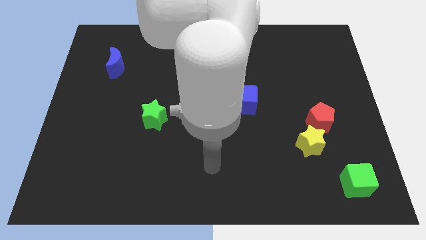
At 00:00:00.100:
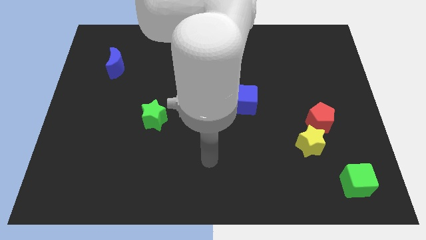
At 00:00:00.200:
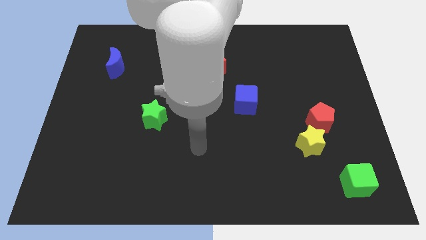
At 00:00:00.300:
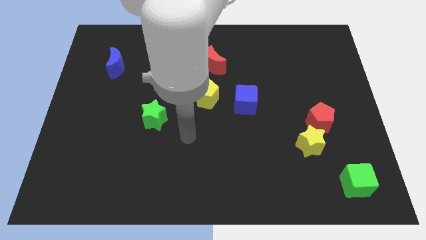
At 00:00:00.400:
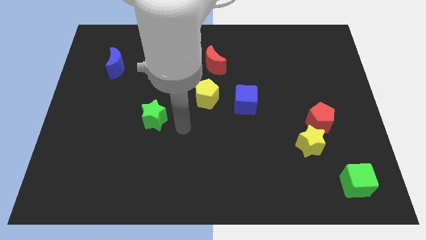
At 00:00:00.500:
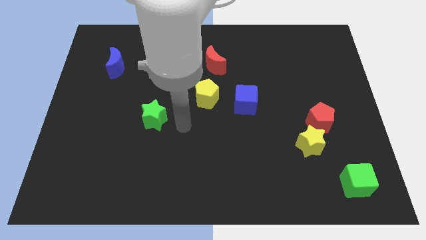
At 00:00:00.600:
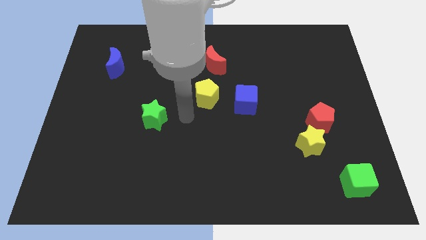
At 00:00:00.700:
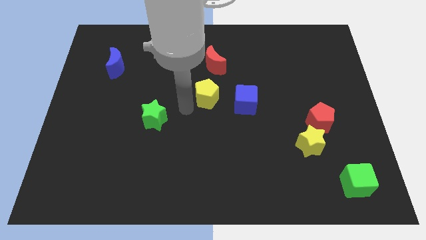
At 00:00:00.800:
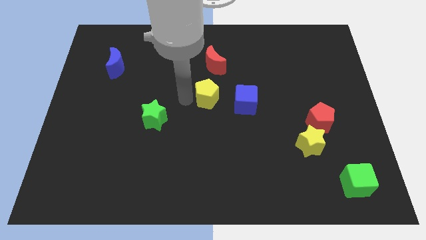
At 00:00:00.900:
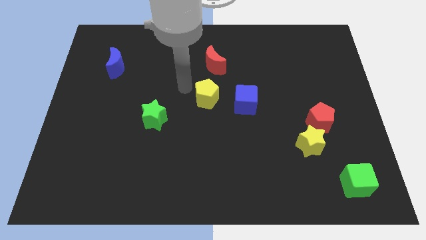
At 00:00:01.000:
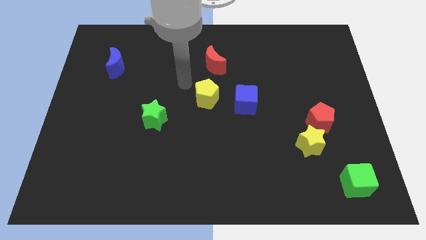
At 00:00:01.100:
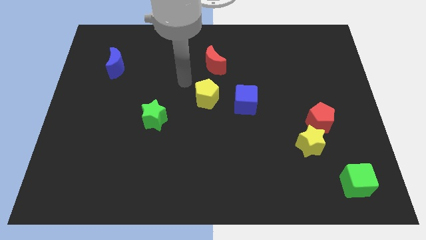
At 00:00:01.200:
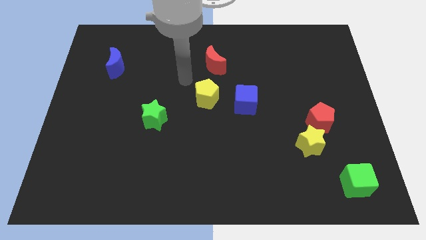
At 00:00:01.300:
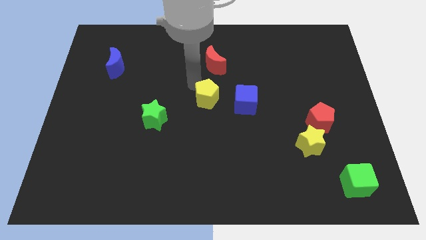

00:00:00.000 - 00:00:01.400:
point your arm to the top left side of the yellow pentagon

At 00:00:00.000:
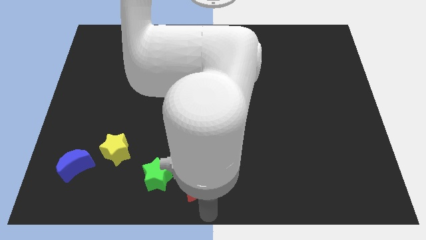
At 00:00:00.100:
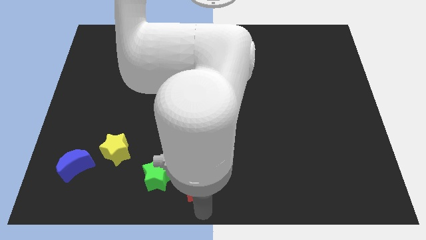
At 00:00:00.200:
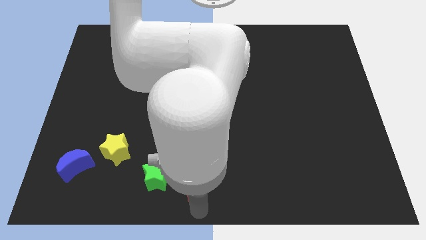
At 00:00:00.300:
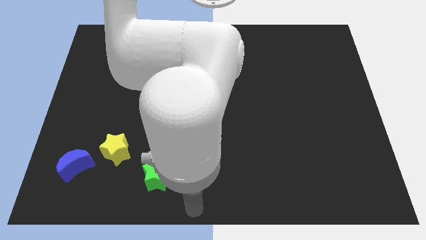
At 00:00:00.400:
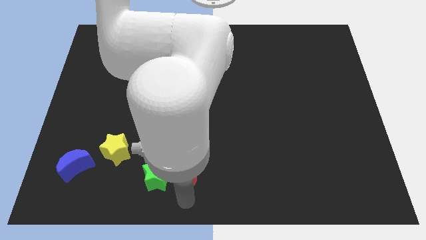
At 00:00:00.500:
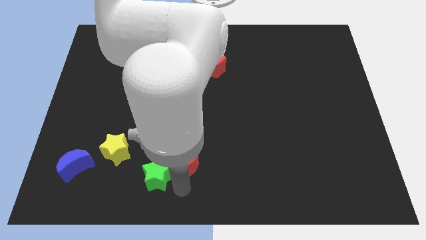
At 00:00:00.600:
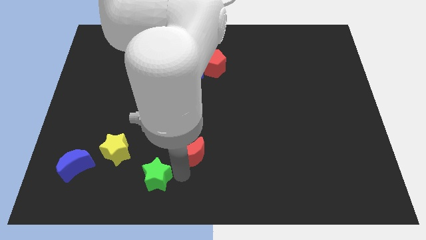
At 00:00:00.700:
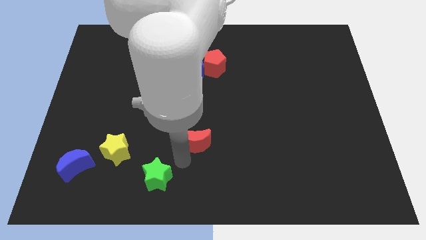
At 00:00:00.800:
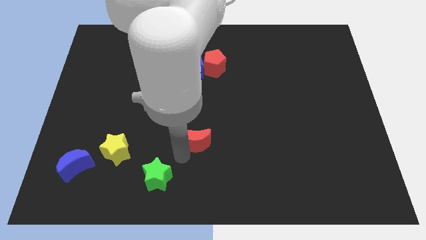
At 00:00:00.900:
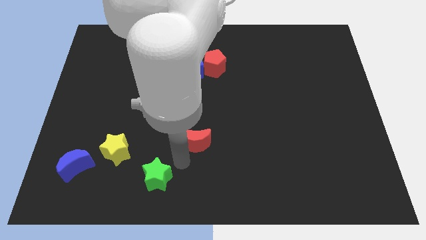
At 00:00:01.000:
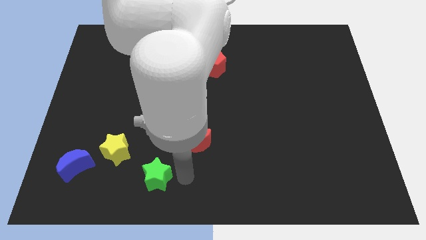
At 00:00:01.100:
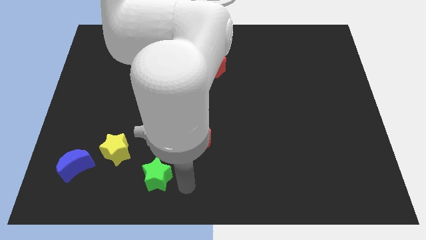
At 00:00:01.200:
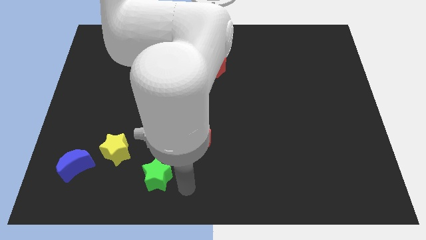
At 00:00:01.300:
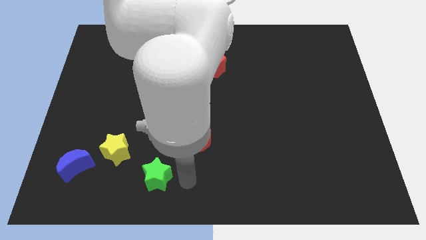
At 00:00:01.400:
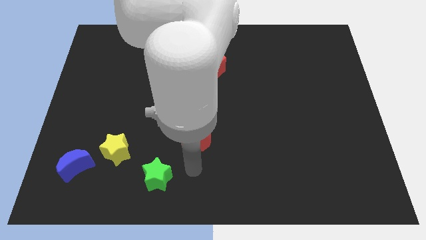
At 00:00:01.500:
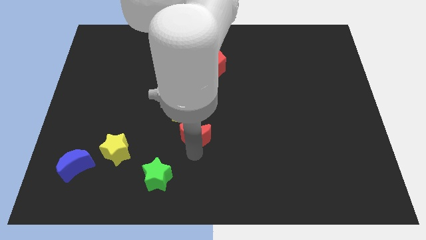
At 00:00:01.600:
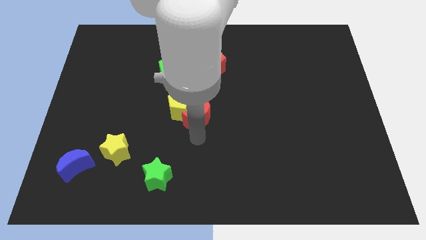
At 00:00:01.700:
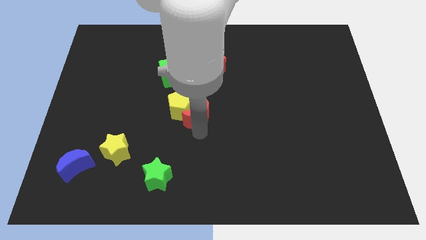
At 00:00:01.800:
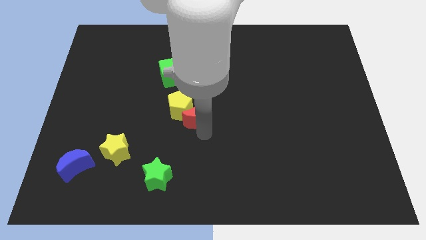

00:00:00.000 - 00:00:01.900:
place the red moon diagonally top right to the green star

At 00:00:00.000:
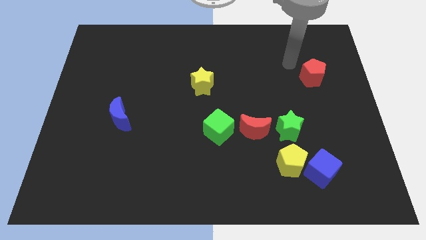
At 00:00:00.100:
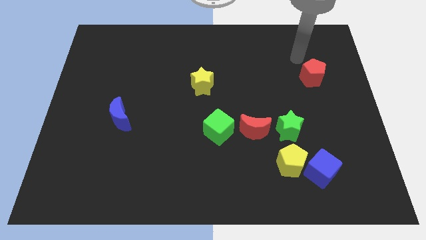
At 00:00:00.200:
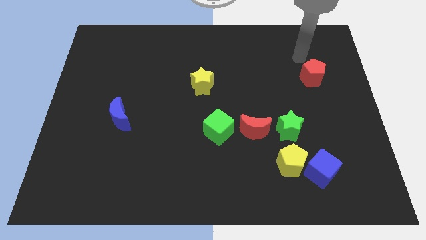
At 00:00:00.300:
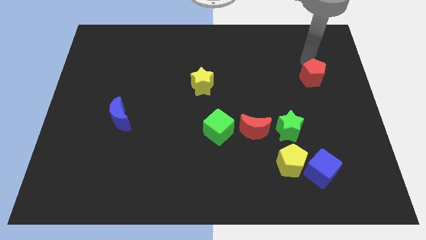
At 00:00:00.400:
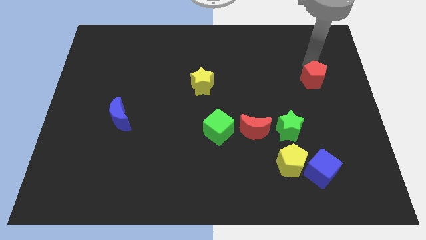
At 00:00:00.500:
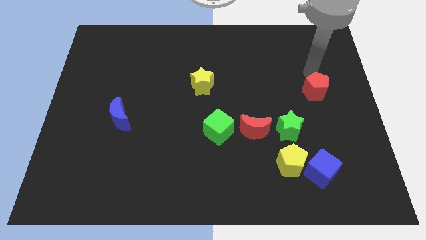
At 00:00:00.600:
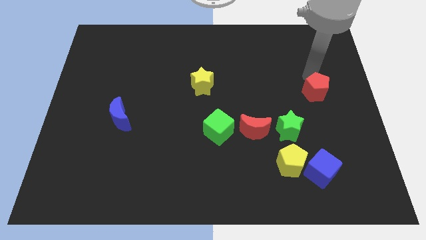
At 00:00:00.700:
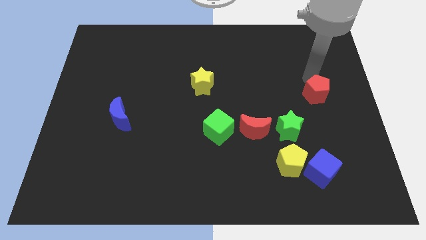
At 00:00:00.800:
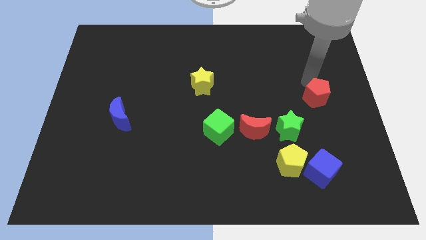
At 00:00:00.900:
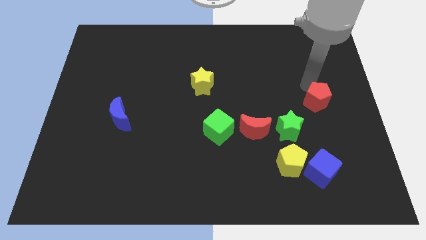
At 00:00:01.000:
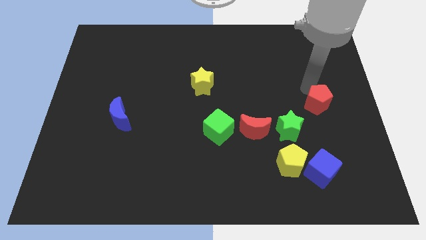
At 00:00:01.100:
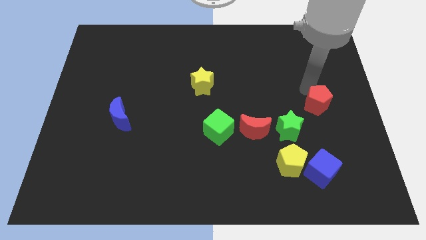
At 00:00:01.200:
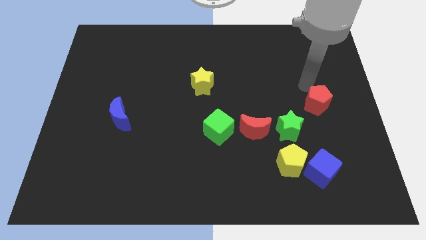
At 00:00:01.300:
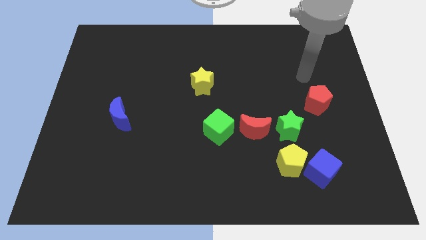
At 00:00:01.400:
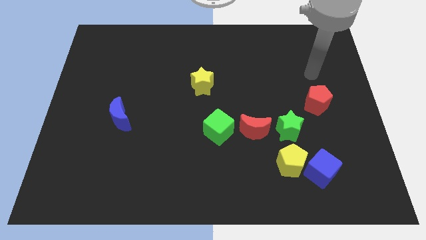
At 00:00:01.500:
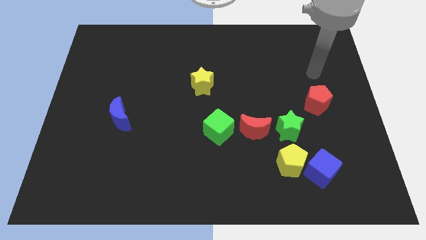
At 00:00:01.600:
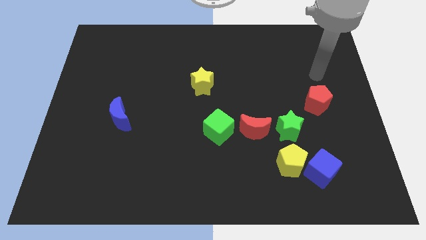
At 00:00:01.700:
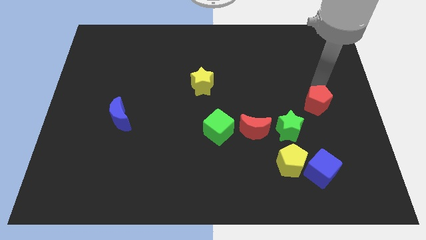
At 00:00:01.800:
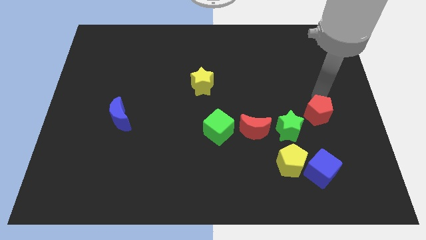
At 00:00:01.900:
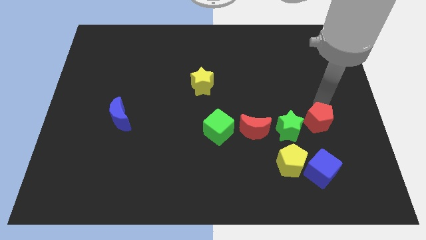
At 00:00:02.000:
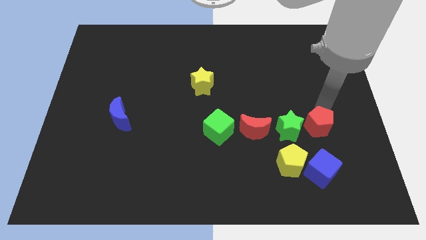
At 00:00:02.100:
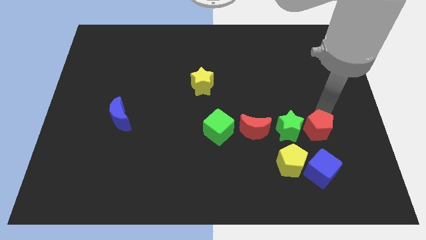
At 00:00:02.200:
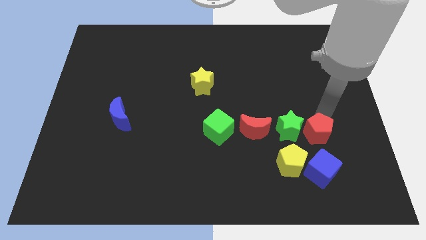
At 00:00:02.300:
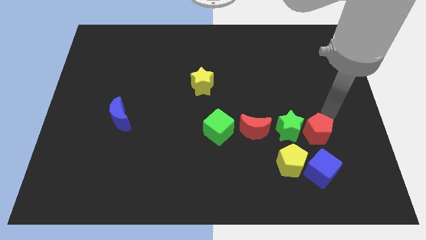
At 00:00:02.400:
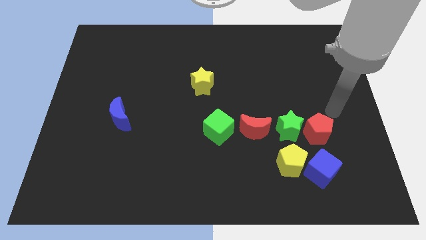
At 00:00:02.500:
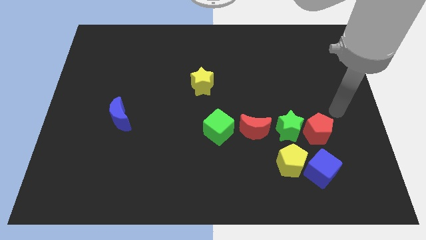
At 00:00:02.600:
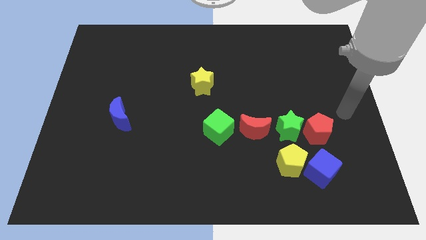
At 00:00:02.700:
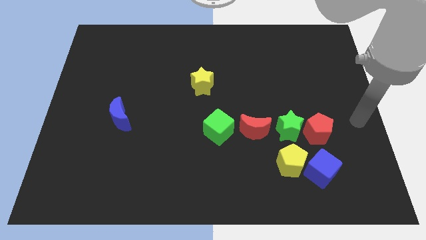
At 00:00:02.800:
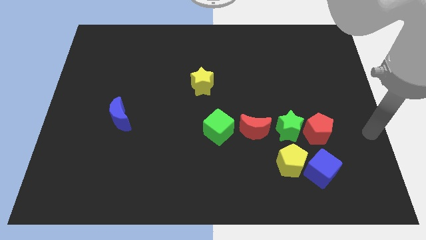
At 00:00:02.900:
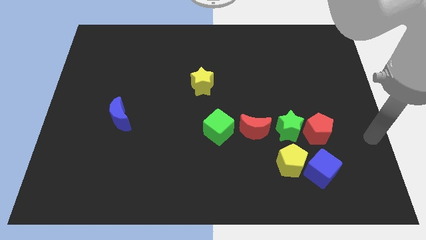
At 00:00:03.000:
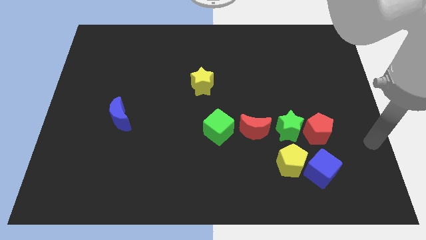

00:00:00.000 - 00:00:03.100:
add red pentagon to the right of green star

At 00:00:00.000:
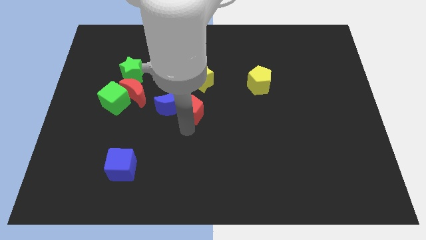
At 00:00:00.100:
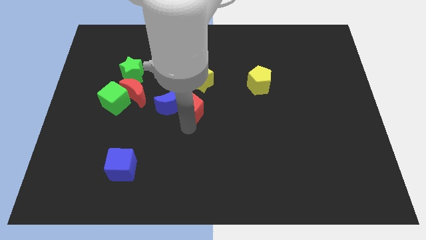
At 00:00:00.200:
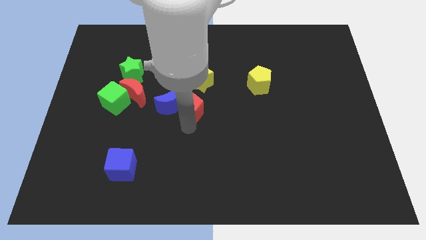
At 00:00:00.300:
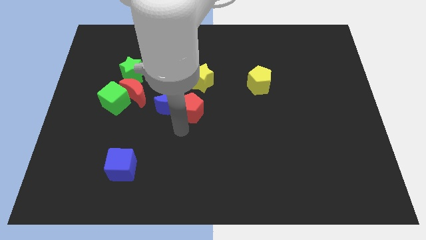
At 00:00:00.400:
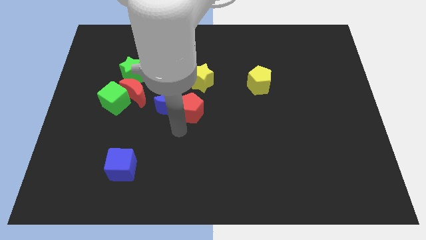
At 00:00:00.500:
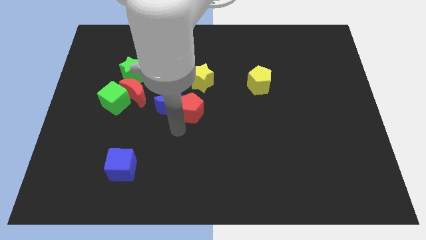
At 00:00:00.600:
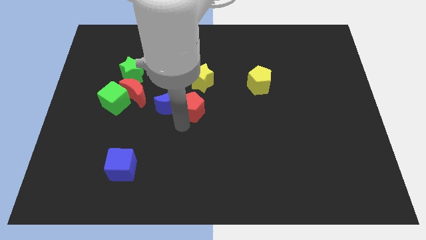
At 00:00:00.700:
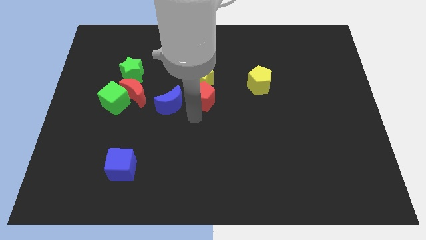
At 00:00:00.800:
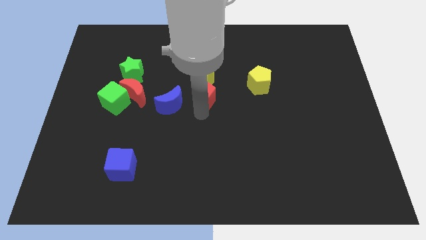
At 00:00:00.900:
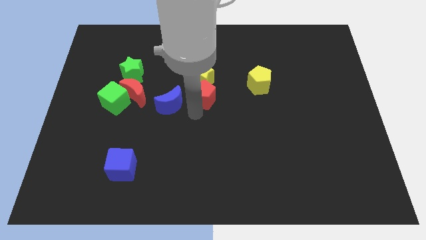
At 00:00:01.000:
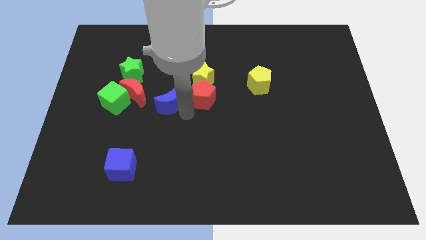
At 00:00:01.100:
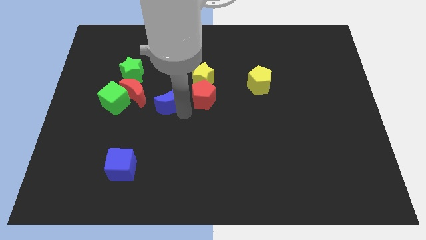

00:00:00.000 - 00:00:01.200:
push the red pentagon into the yellow star

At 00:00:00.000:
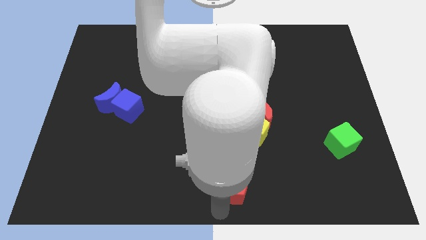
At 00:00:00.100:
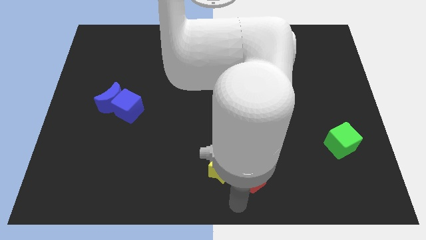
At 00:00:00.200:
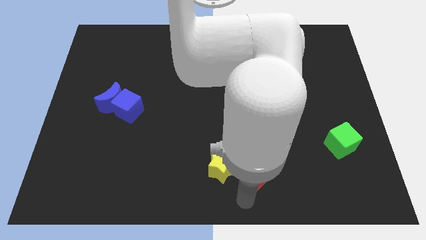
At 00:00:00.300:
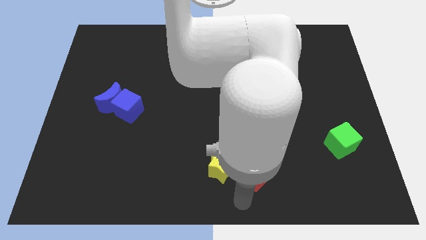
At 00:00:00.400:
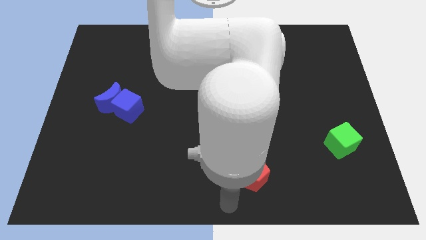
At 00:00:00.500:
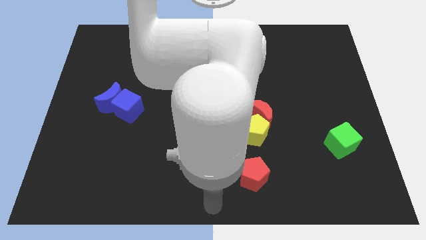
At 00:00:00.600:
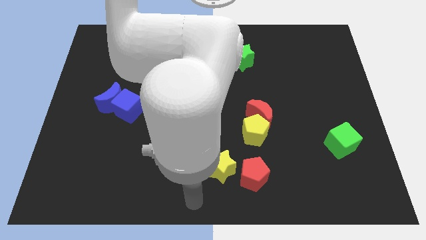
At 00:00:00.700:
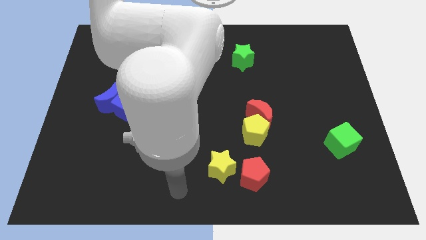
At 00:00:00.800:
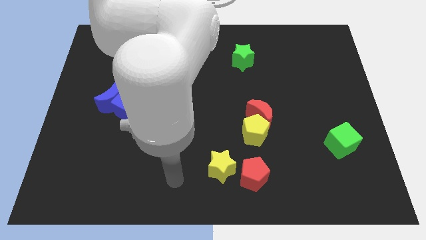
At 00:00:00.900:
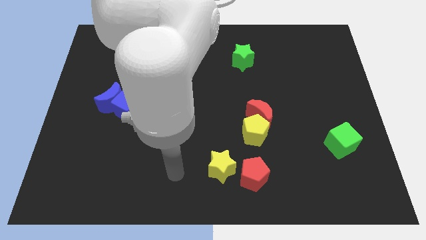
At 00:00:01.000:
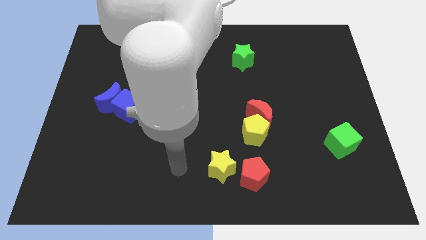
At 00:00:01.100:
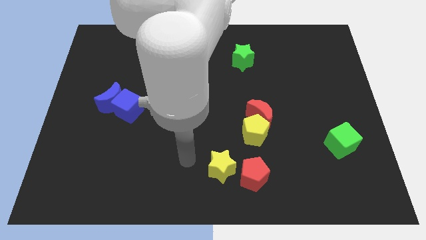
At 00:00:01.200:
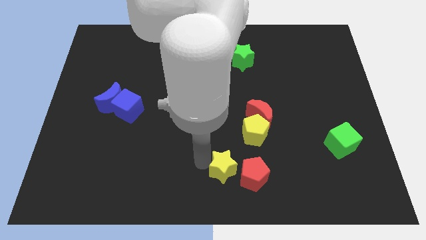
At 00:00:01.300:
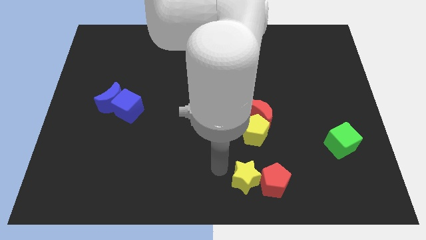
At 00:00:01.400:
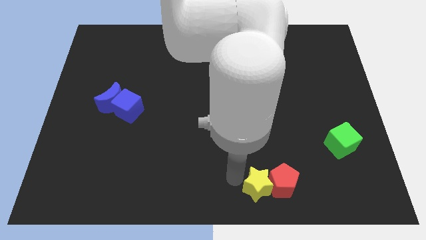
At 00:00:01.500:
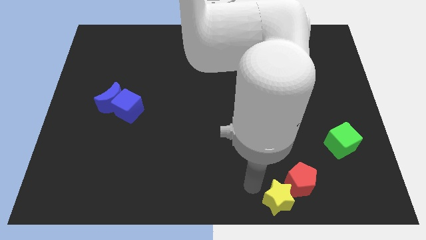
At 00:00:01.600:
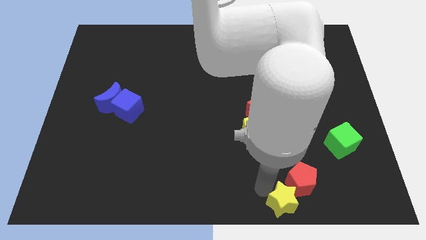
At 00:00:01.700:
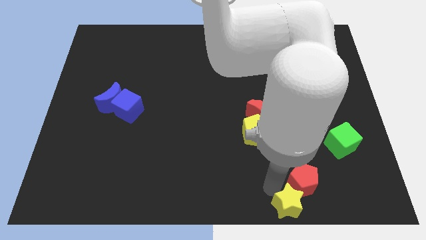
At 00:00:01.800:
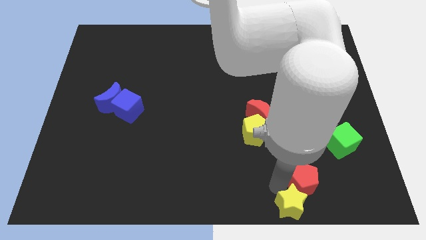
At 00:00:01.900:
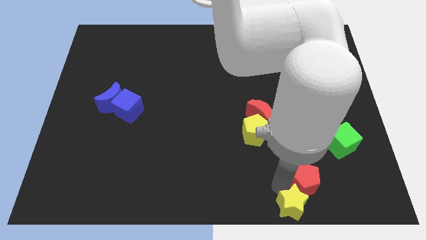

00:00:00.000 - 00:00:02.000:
slide yellow star and the red pentagon towards the bottom right
